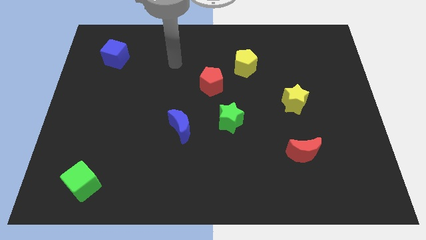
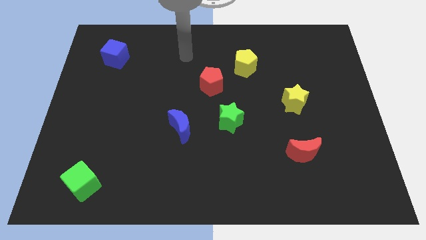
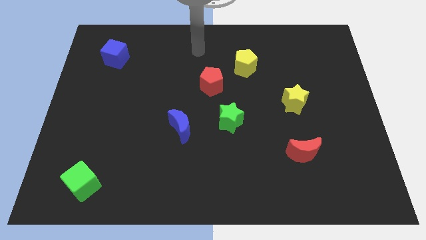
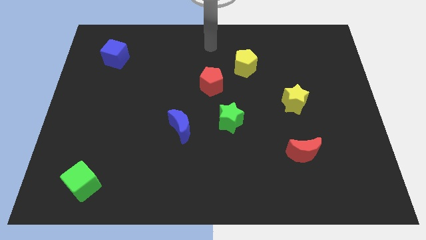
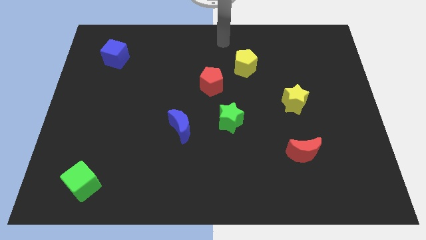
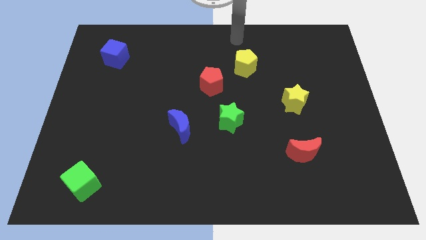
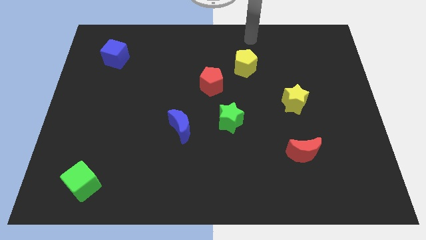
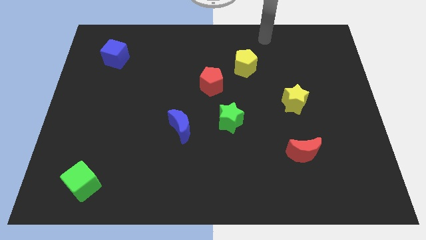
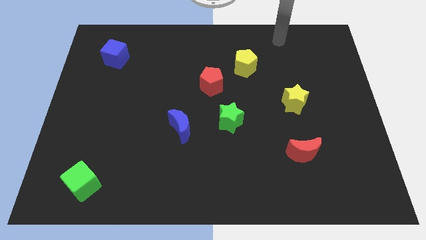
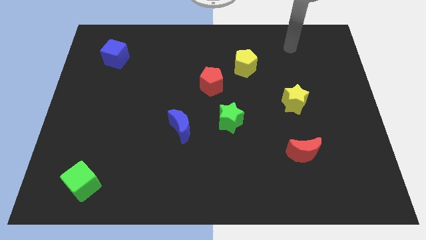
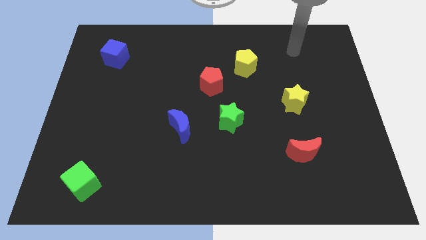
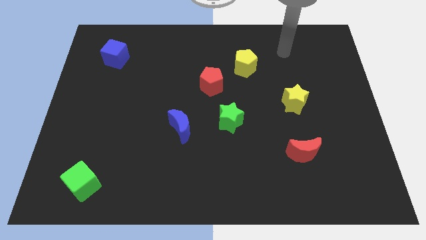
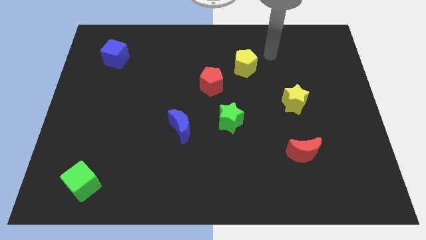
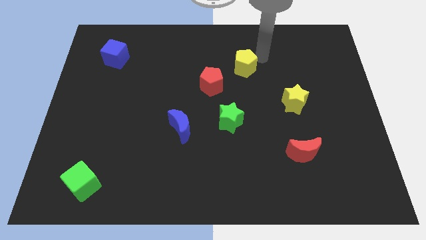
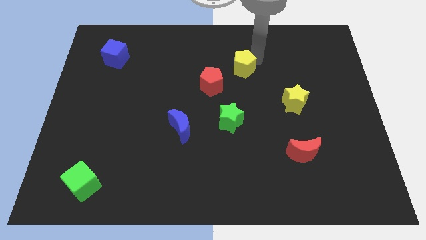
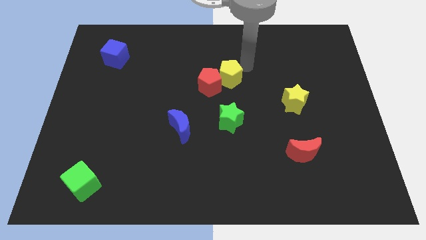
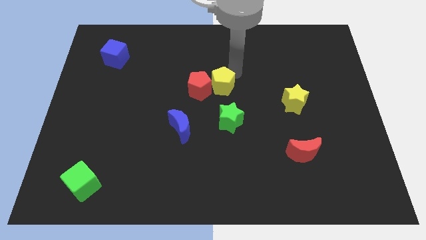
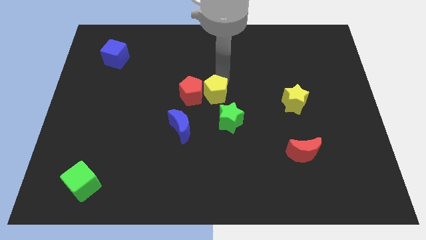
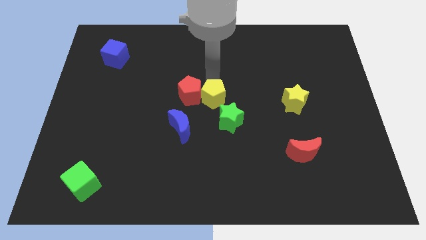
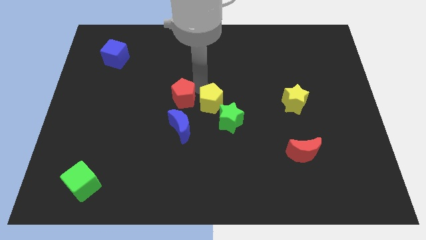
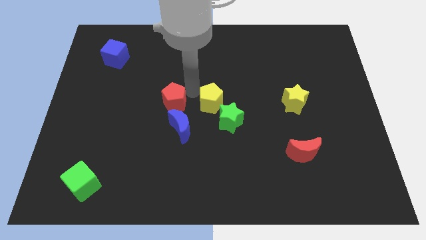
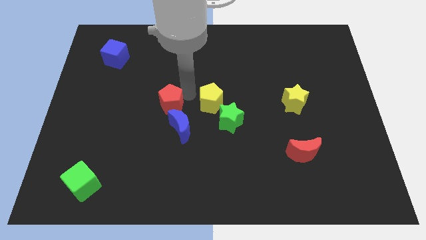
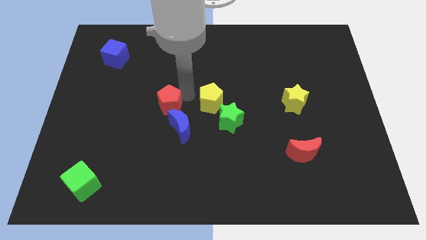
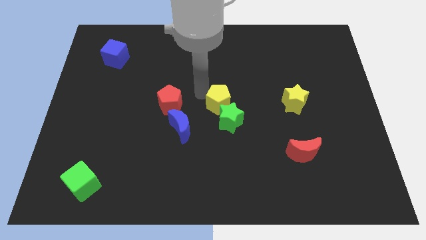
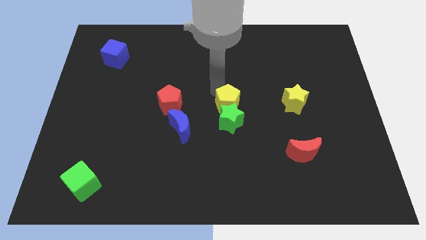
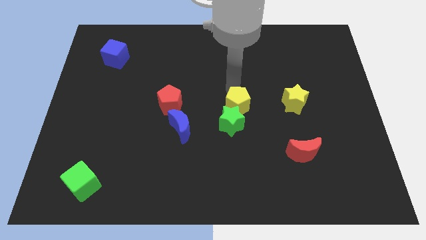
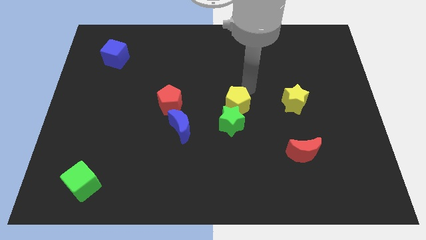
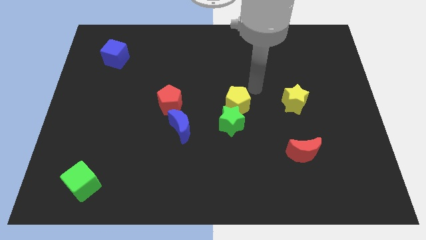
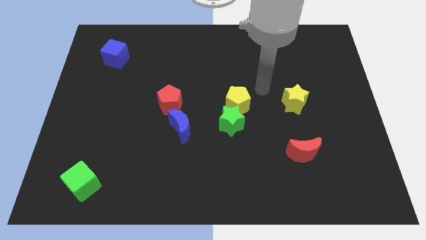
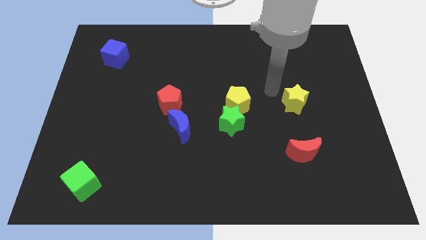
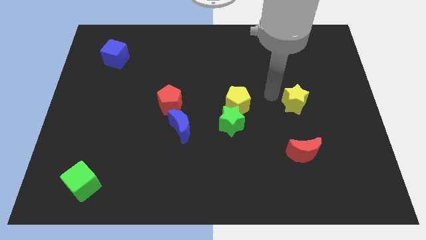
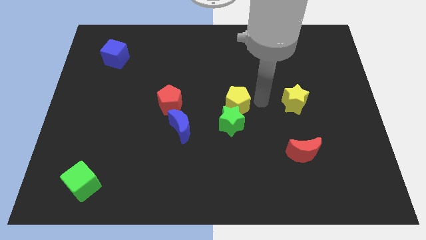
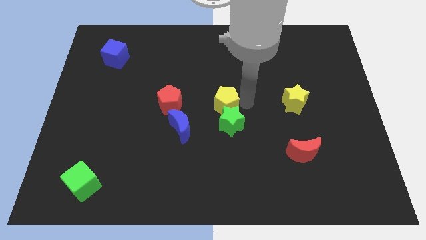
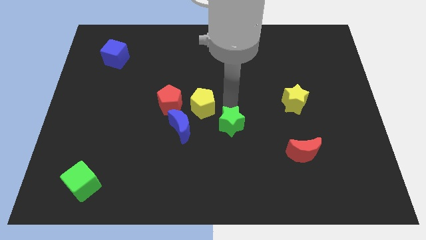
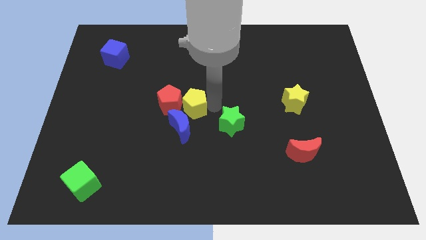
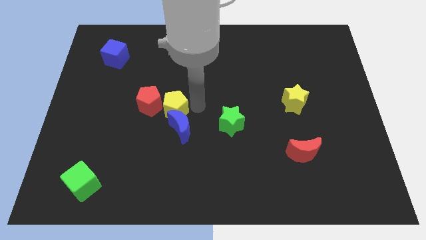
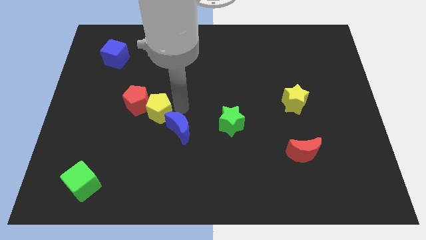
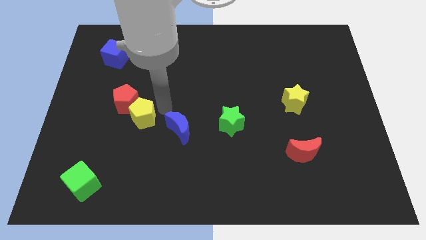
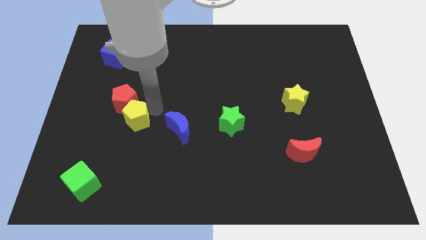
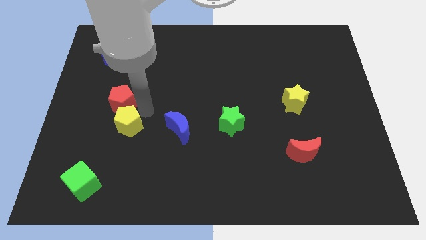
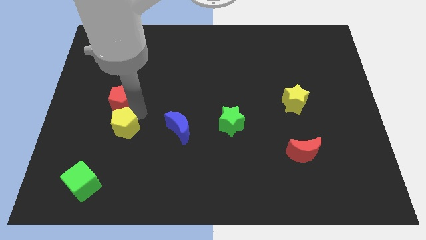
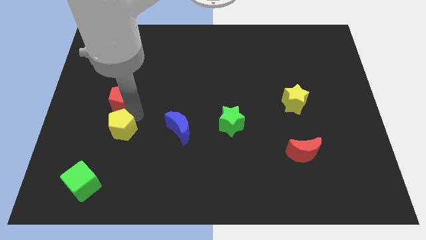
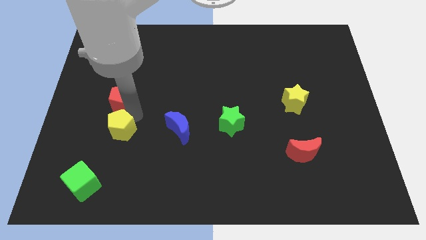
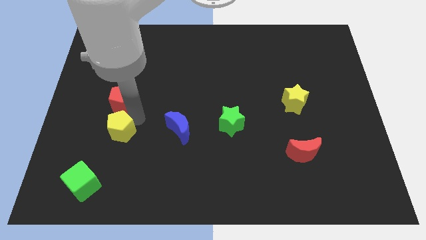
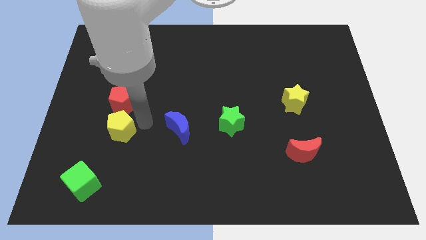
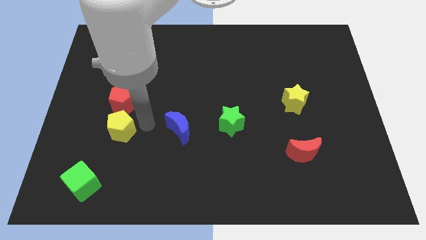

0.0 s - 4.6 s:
place the red pentagon and yellow pentagon to the center left

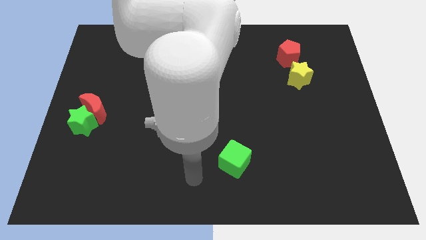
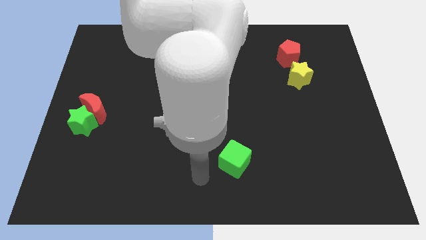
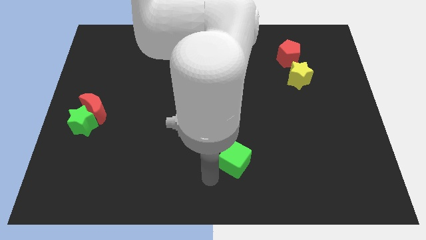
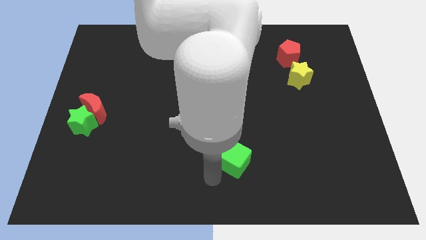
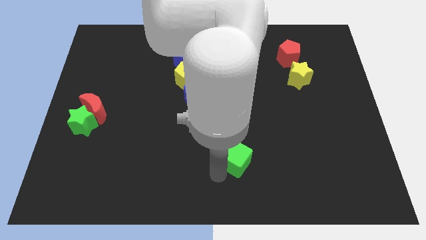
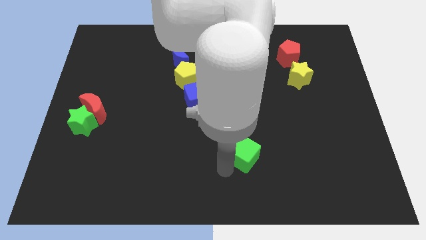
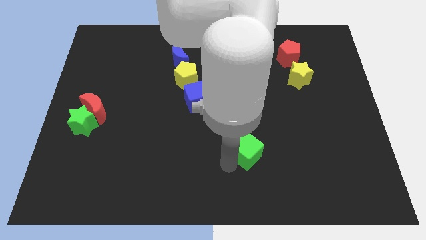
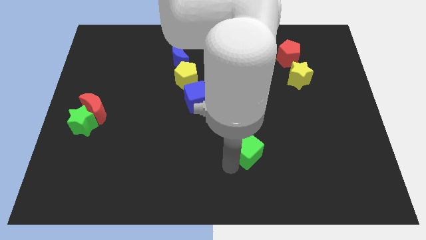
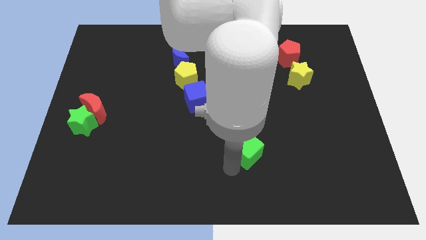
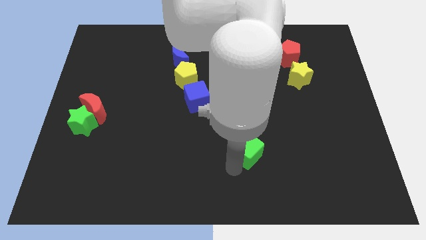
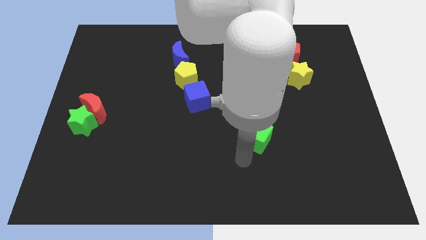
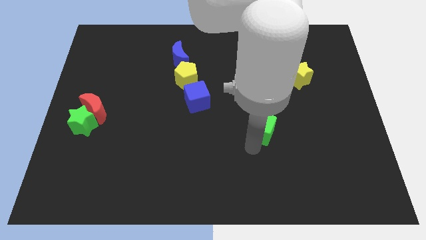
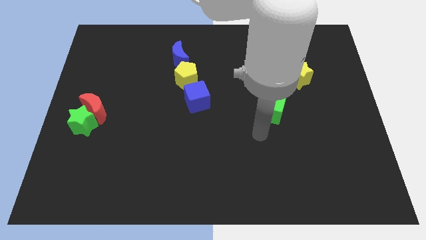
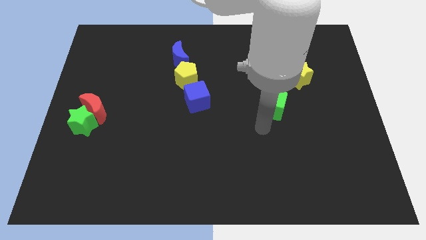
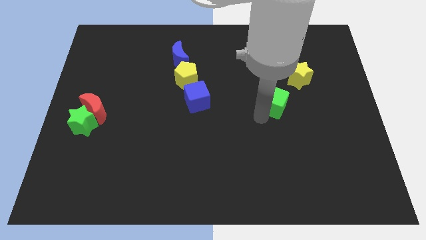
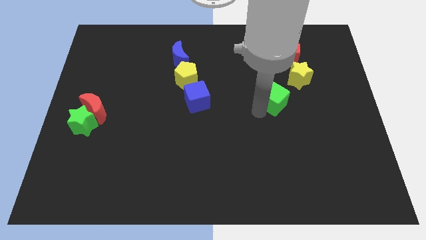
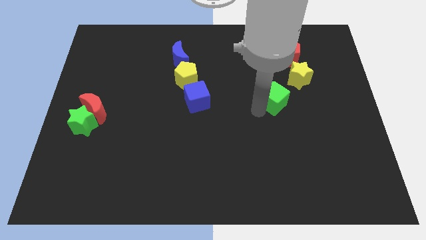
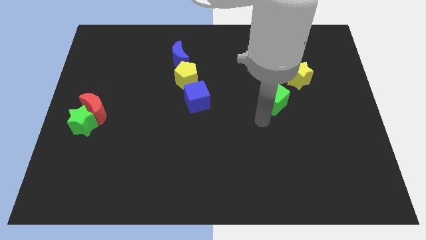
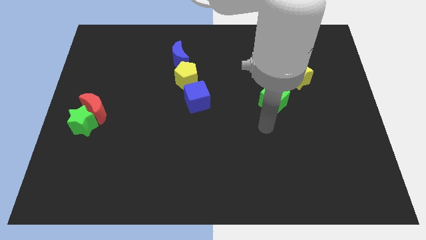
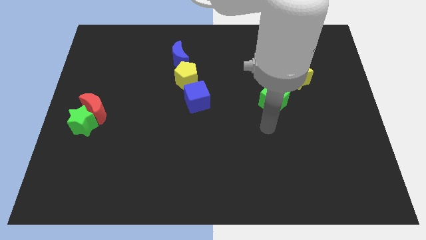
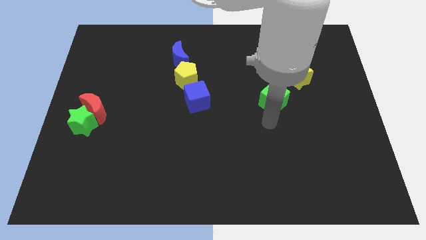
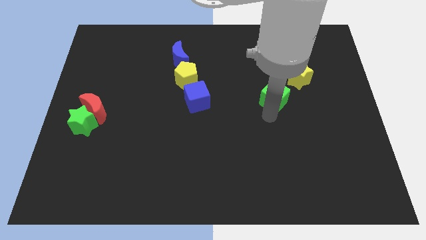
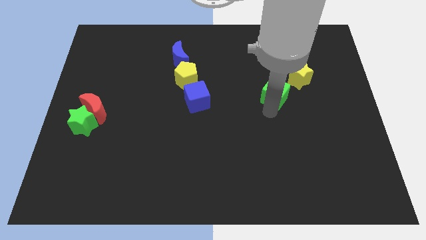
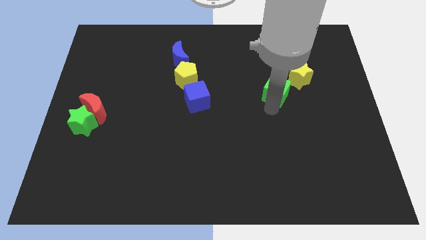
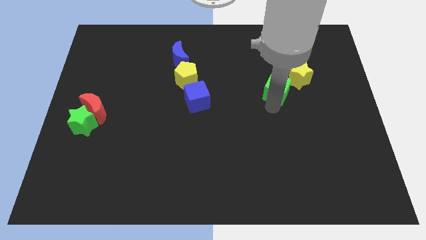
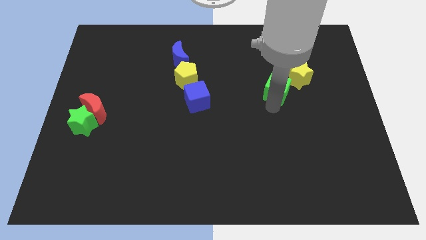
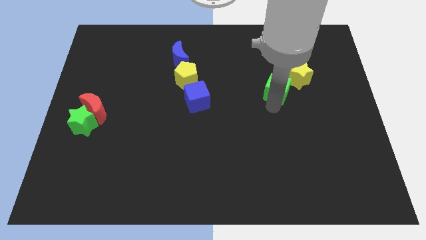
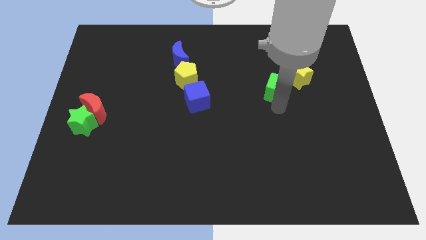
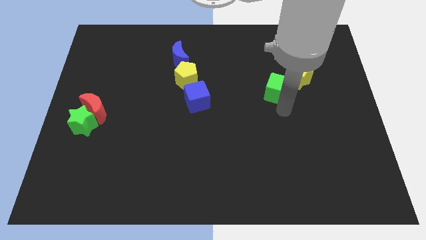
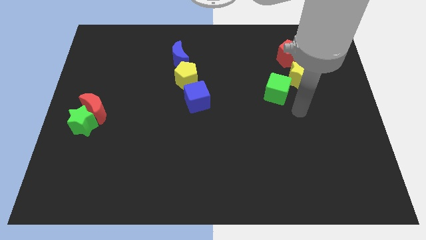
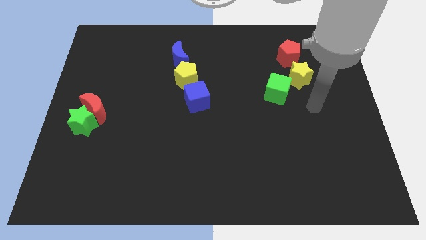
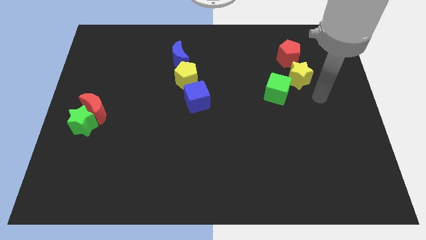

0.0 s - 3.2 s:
push the green cube to the bottom left of the yellow star

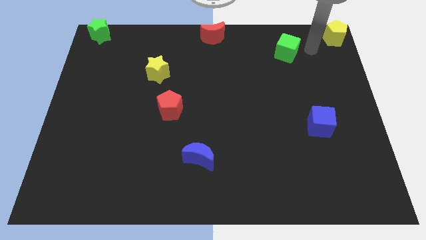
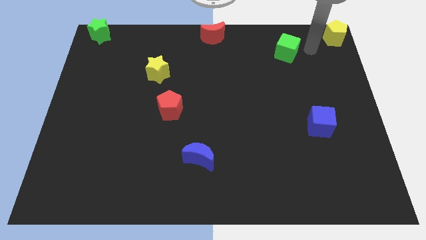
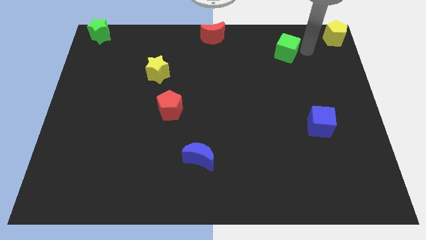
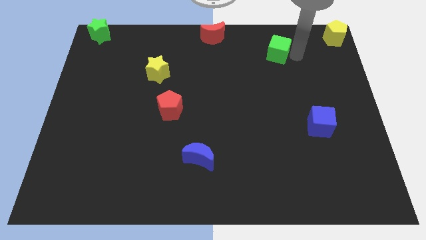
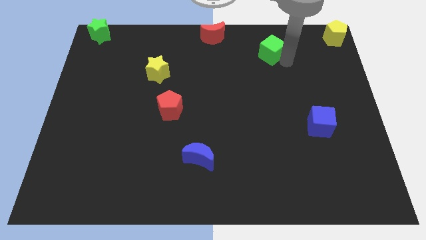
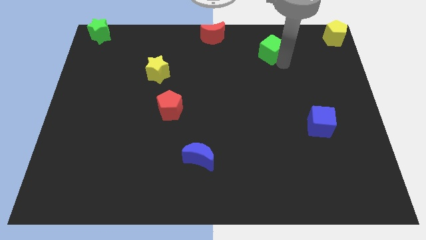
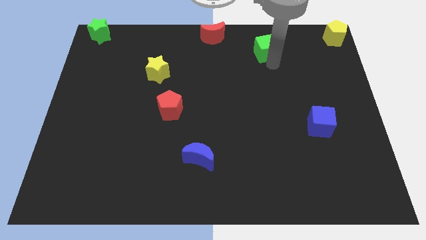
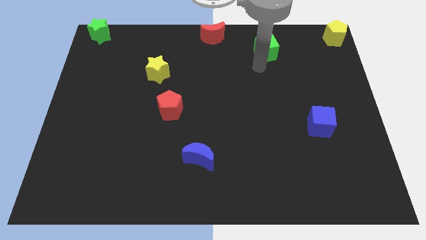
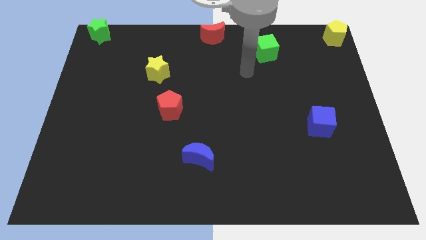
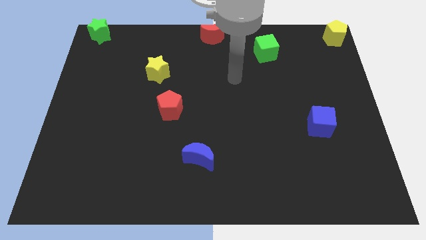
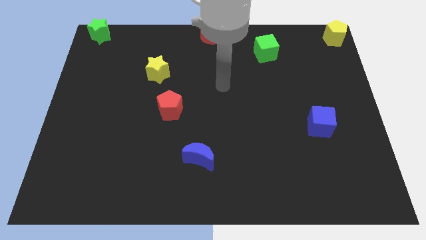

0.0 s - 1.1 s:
push the green cube towards left

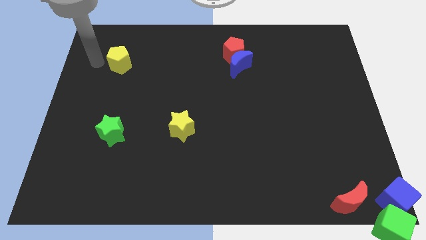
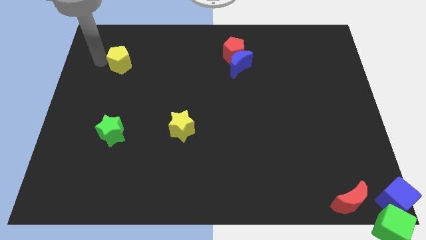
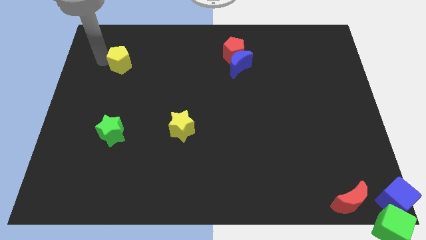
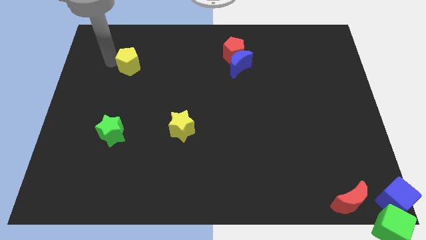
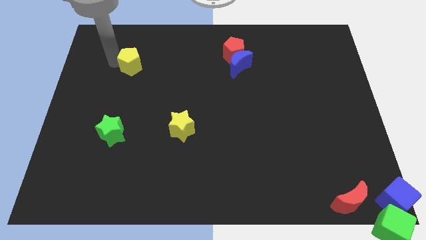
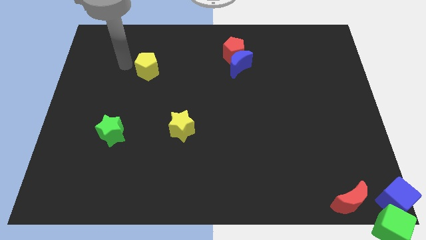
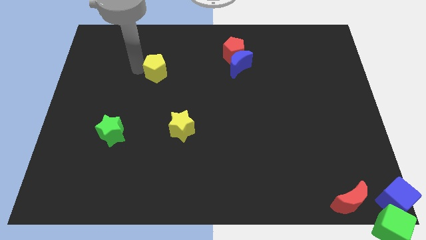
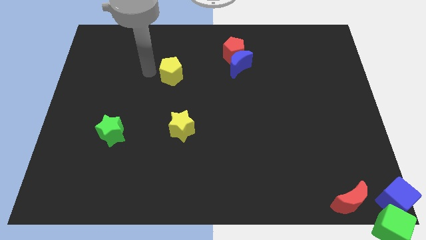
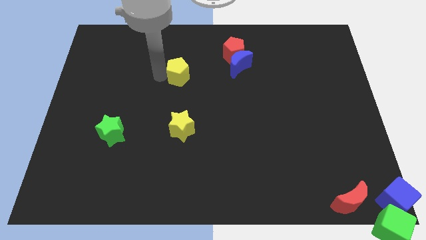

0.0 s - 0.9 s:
place the yellow pentagon above the yellow star
